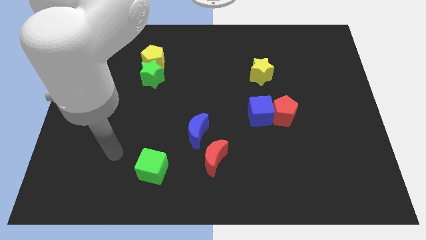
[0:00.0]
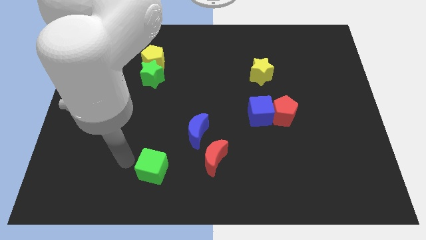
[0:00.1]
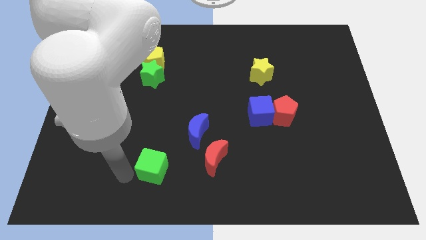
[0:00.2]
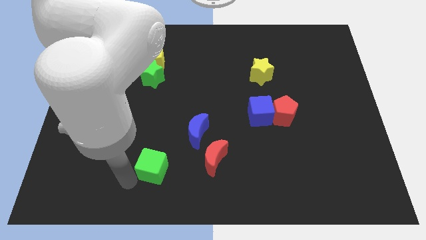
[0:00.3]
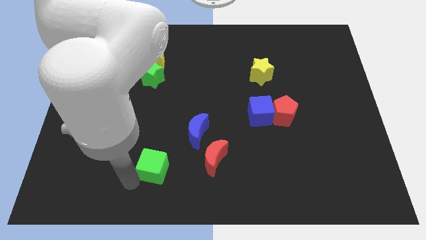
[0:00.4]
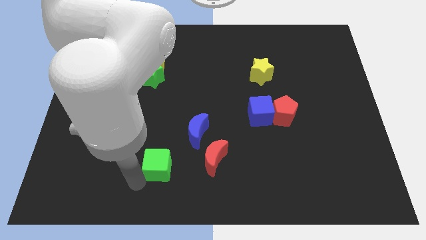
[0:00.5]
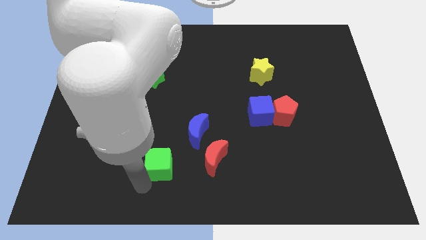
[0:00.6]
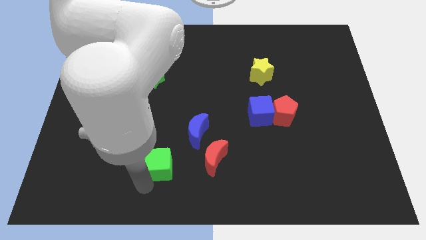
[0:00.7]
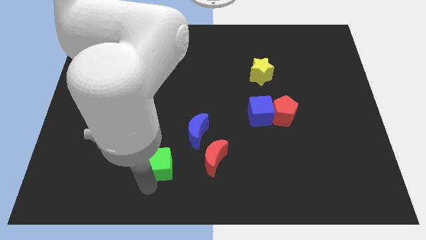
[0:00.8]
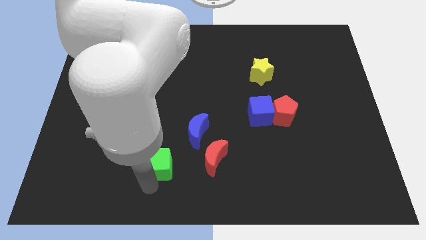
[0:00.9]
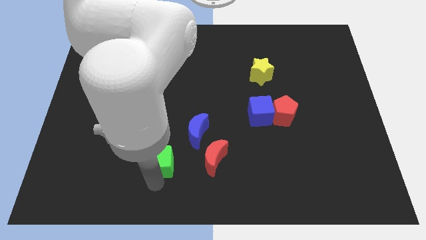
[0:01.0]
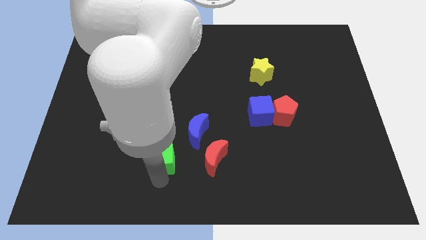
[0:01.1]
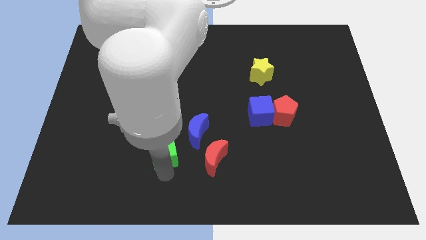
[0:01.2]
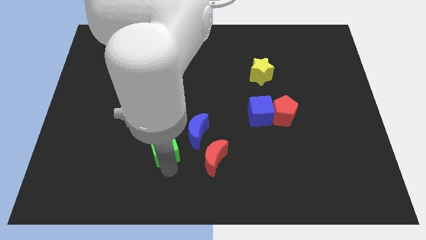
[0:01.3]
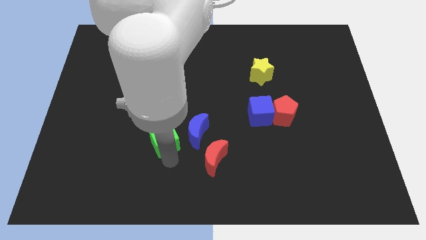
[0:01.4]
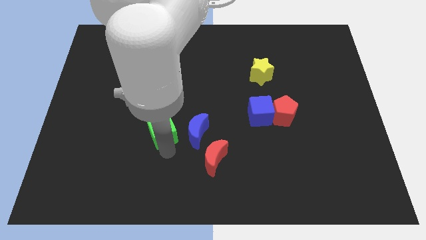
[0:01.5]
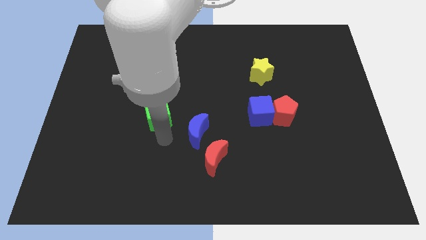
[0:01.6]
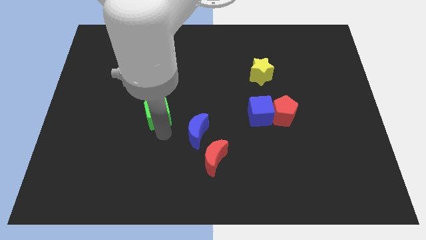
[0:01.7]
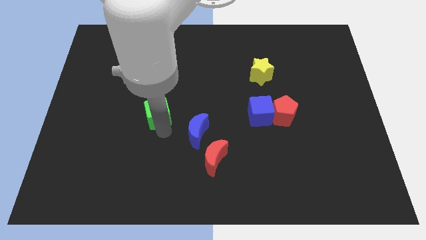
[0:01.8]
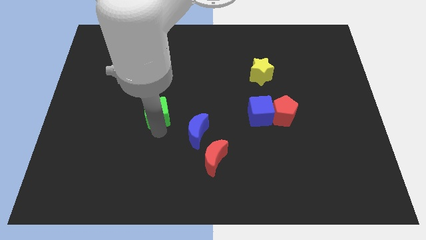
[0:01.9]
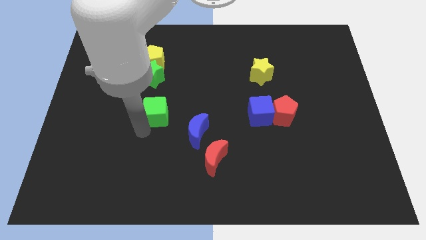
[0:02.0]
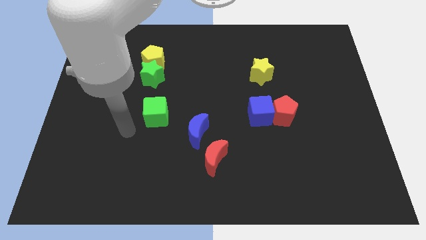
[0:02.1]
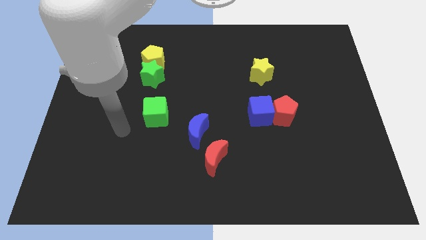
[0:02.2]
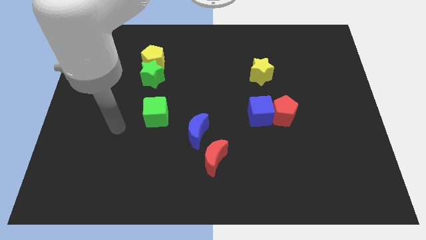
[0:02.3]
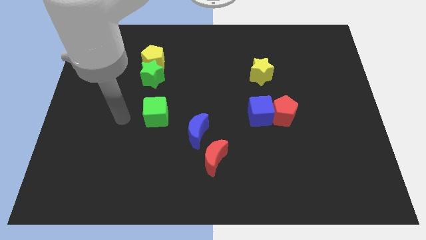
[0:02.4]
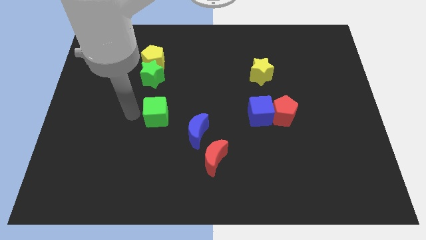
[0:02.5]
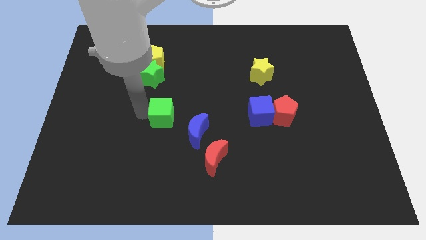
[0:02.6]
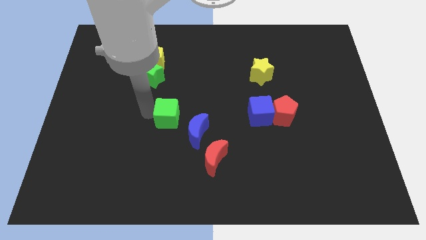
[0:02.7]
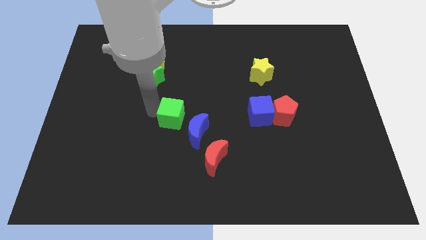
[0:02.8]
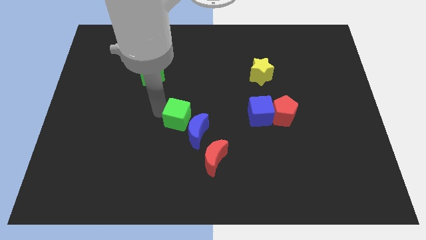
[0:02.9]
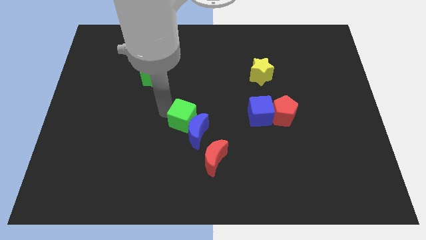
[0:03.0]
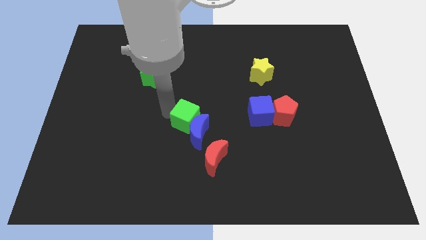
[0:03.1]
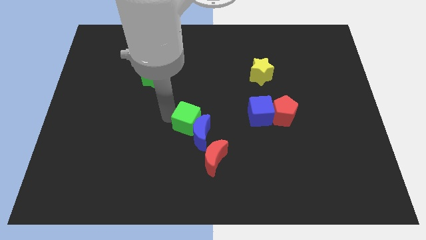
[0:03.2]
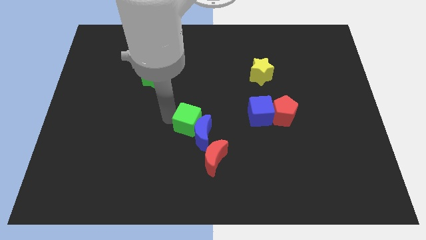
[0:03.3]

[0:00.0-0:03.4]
push green cube upwards

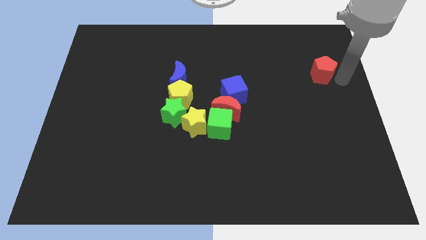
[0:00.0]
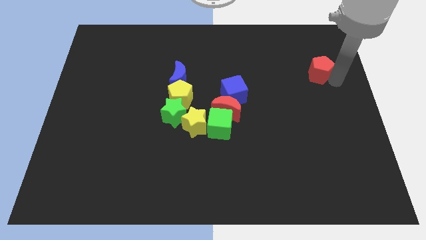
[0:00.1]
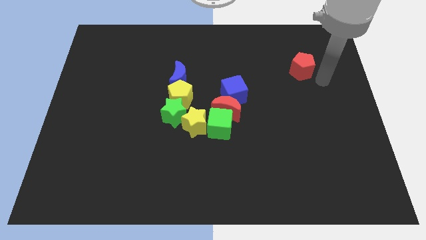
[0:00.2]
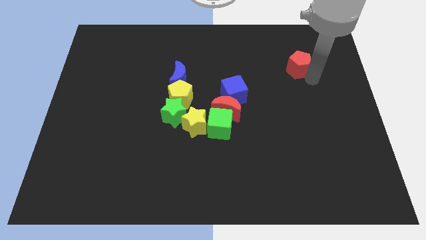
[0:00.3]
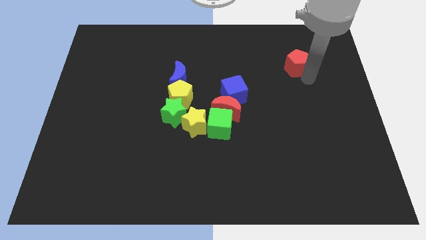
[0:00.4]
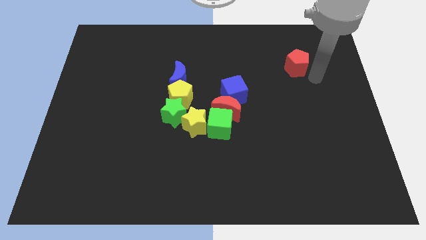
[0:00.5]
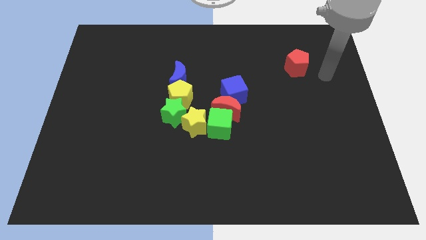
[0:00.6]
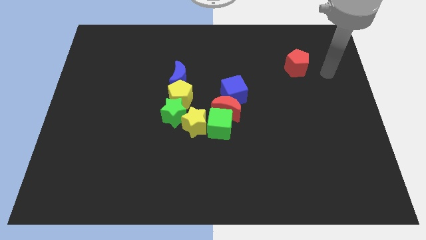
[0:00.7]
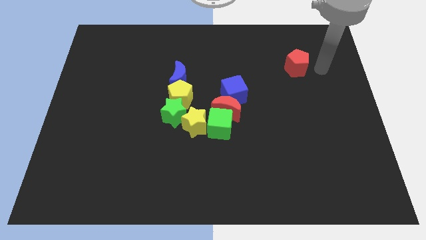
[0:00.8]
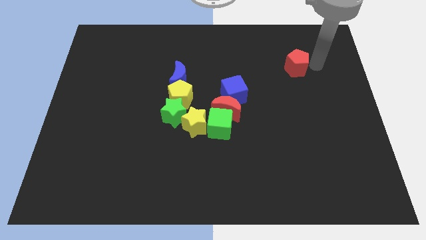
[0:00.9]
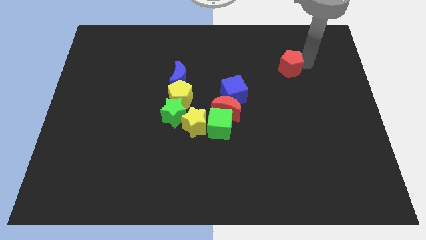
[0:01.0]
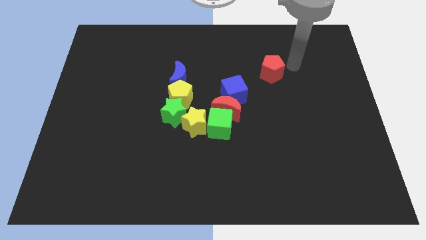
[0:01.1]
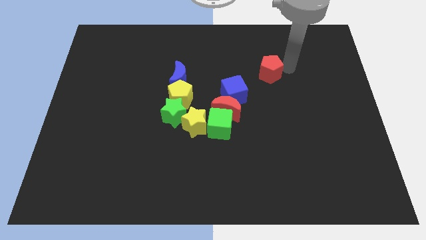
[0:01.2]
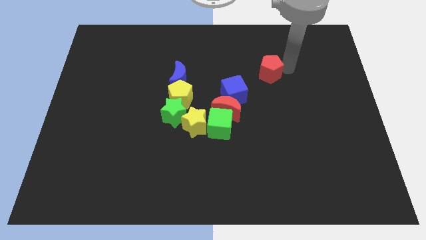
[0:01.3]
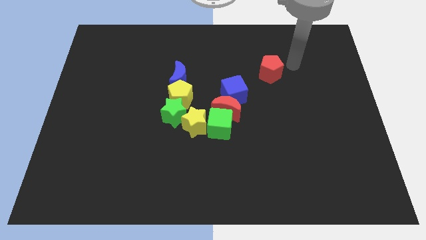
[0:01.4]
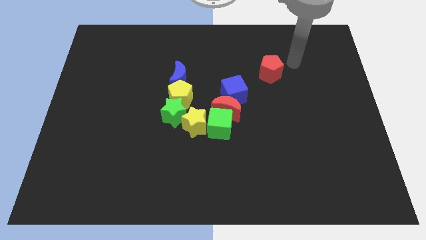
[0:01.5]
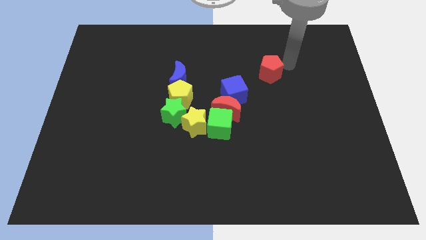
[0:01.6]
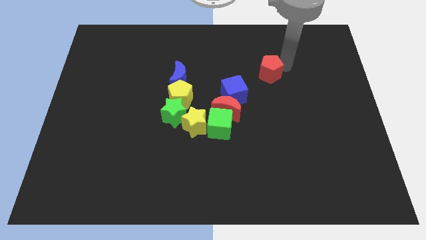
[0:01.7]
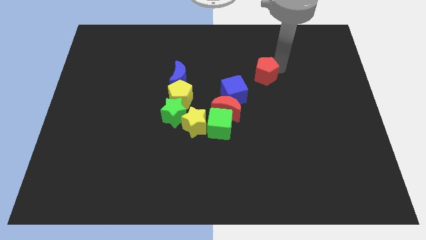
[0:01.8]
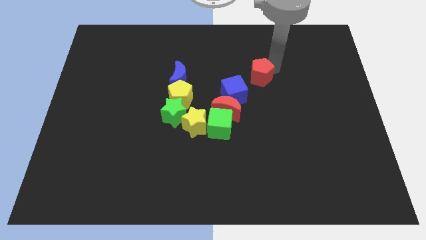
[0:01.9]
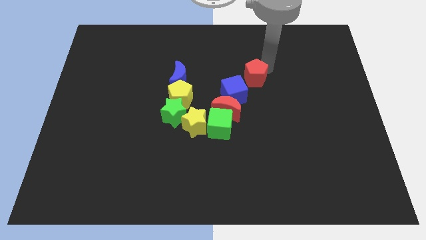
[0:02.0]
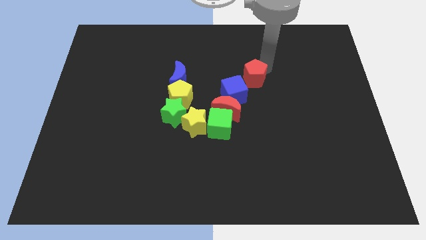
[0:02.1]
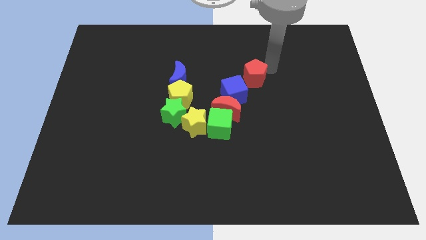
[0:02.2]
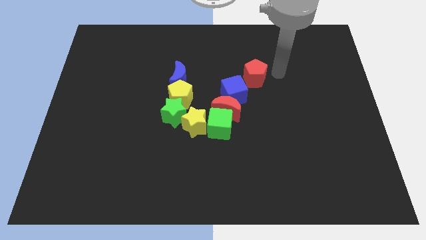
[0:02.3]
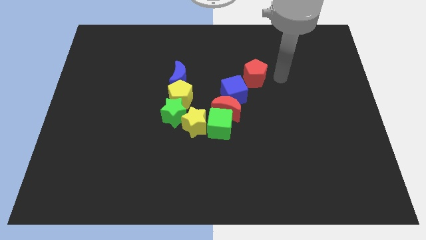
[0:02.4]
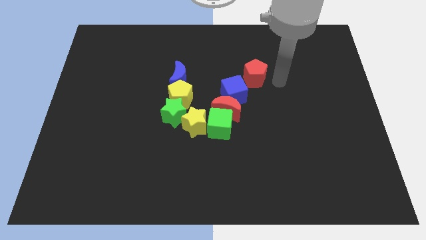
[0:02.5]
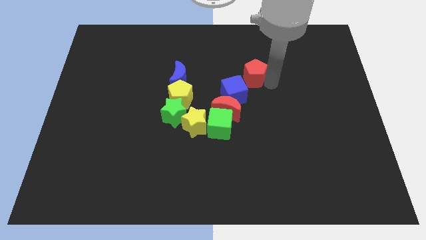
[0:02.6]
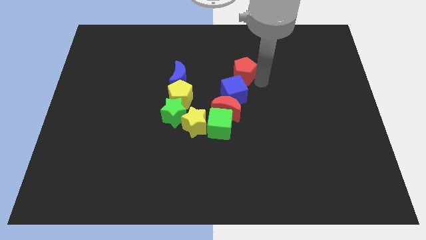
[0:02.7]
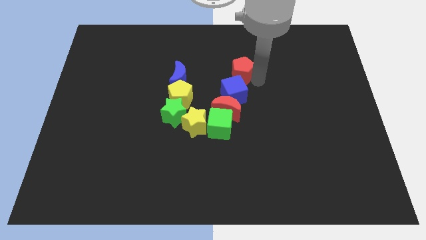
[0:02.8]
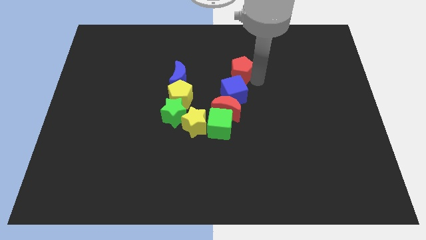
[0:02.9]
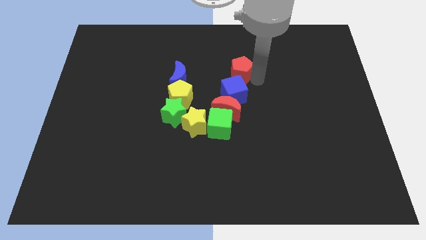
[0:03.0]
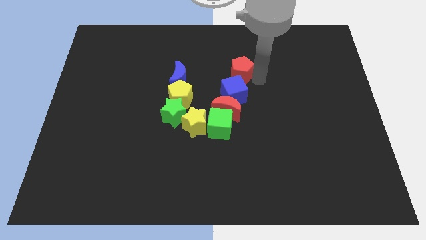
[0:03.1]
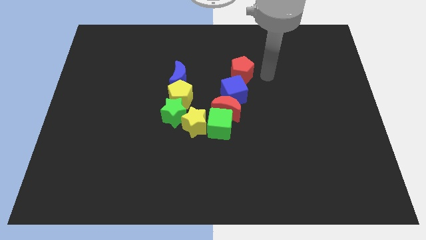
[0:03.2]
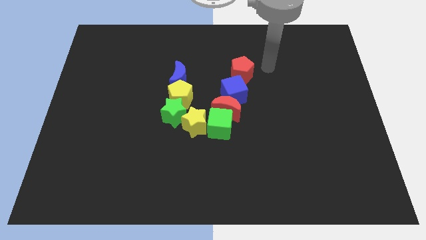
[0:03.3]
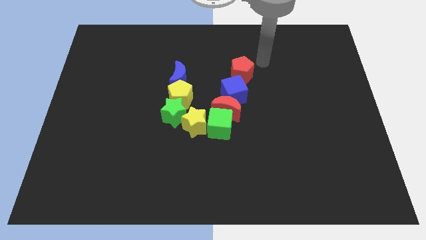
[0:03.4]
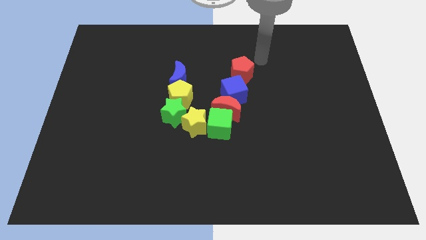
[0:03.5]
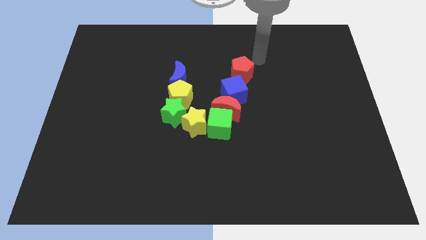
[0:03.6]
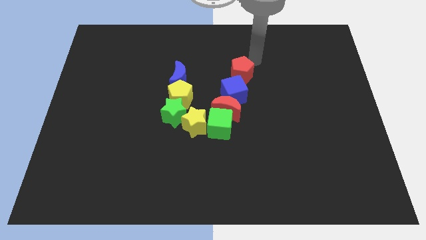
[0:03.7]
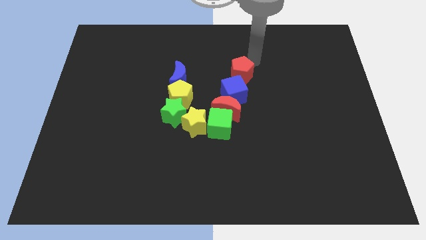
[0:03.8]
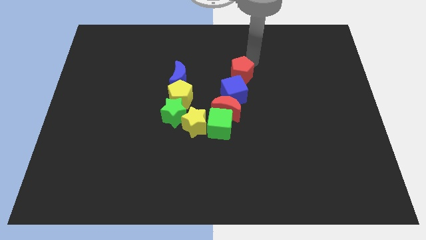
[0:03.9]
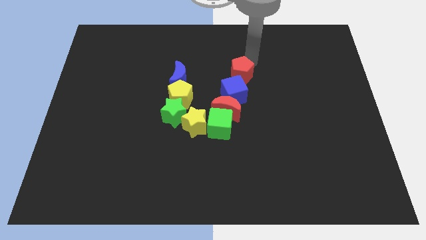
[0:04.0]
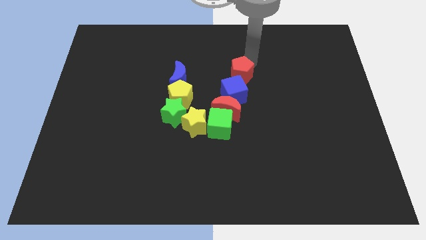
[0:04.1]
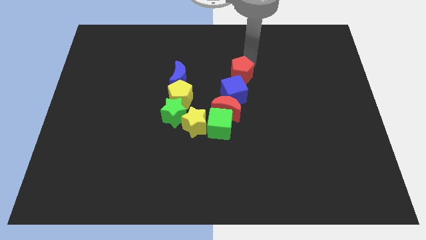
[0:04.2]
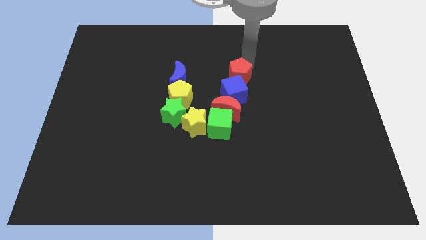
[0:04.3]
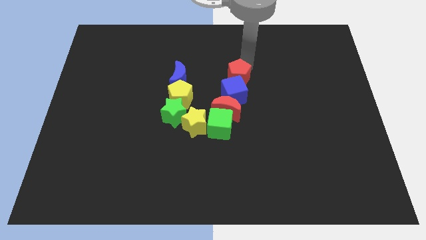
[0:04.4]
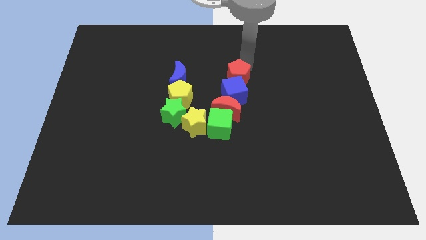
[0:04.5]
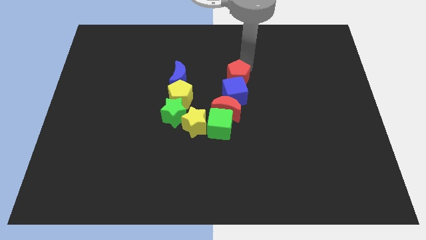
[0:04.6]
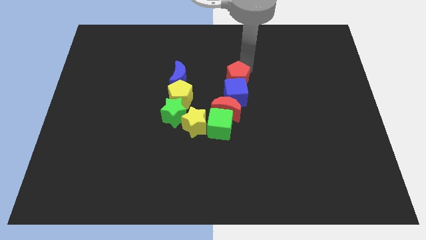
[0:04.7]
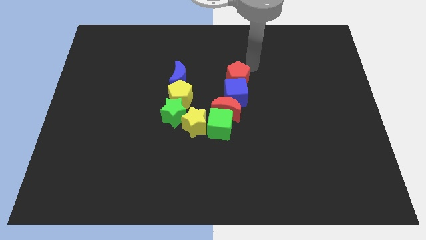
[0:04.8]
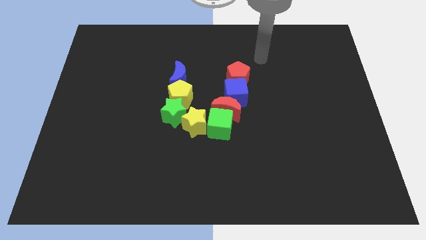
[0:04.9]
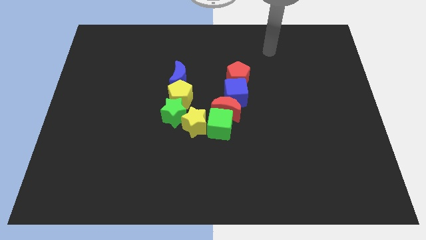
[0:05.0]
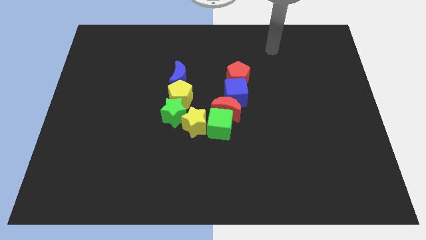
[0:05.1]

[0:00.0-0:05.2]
move the red pentagon above to the blue cube

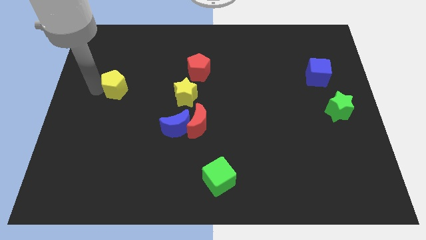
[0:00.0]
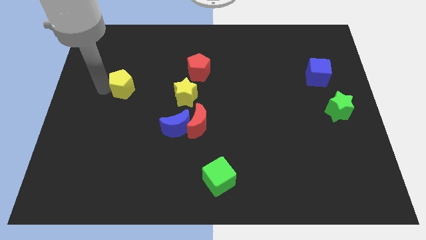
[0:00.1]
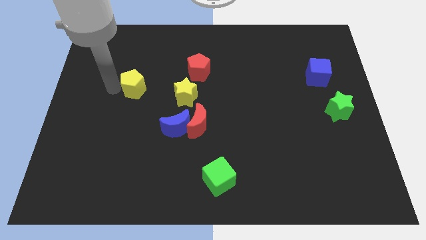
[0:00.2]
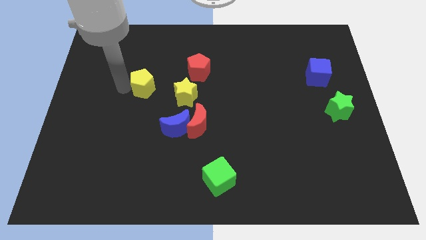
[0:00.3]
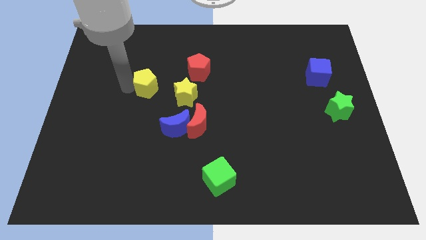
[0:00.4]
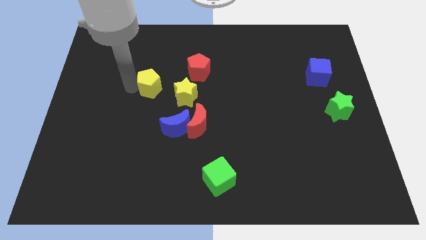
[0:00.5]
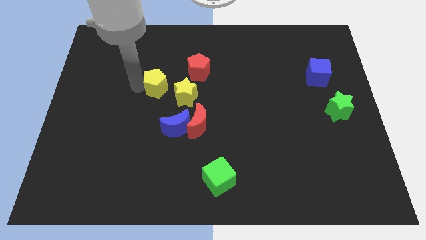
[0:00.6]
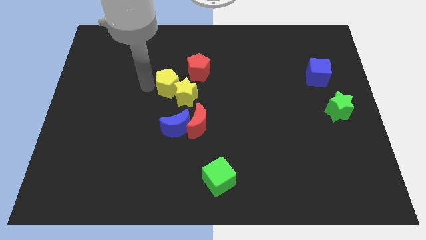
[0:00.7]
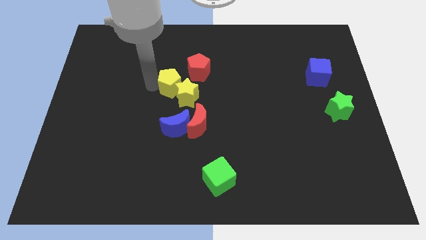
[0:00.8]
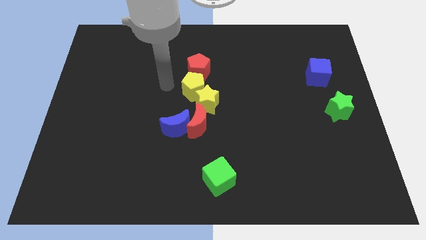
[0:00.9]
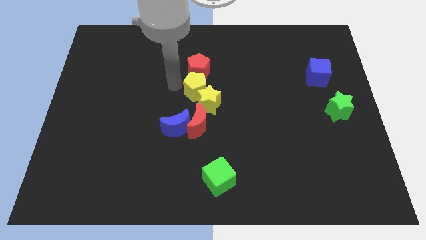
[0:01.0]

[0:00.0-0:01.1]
push the yellow pentagon into yellow star to the center
